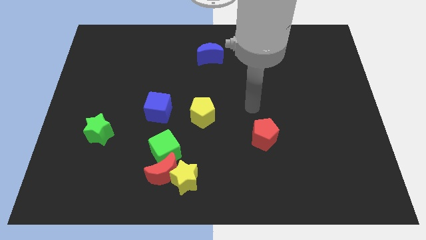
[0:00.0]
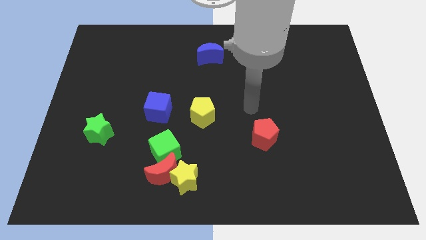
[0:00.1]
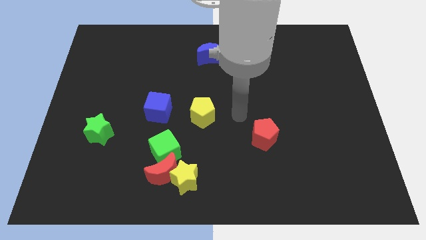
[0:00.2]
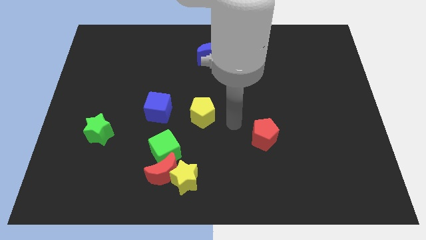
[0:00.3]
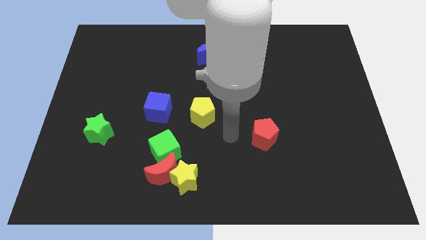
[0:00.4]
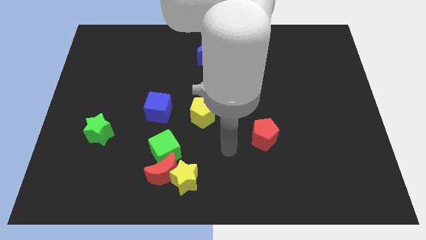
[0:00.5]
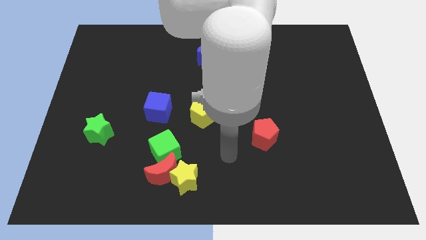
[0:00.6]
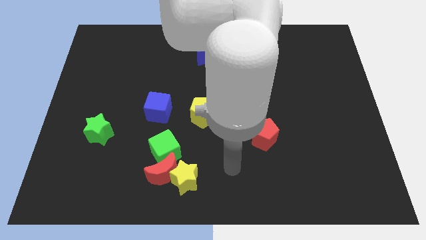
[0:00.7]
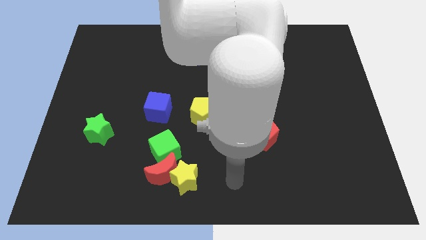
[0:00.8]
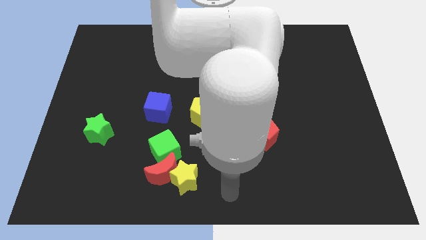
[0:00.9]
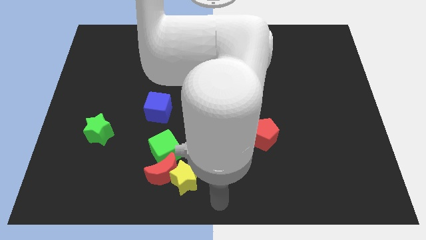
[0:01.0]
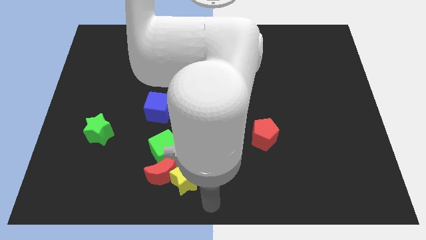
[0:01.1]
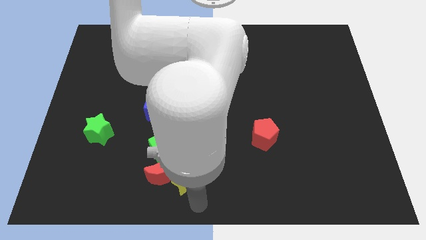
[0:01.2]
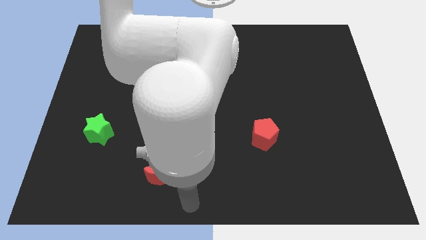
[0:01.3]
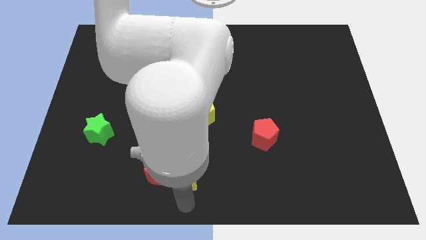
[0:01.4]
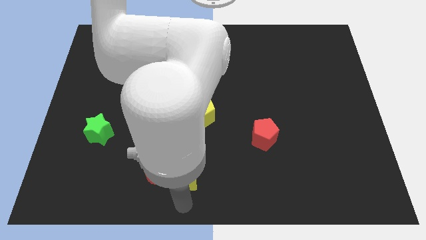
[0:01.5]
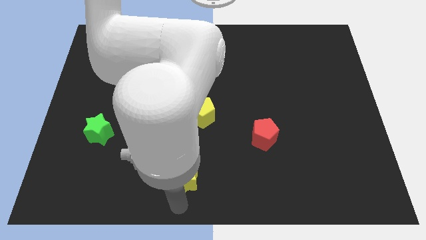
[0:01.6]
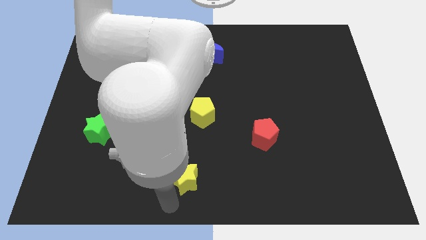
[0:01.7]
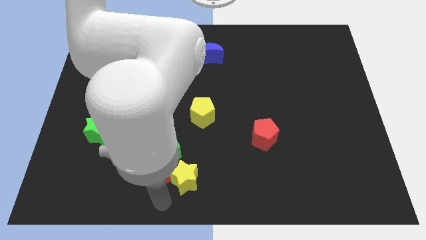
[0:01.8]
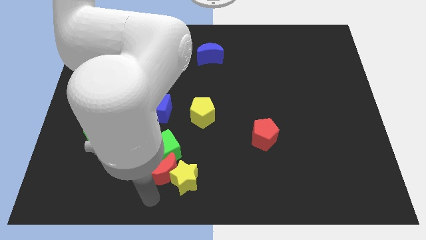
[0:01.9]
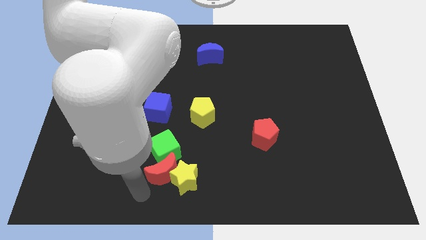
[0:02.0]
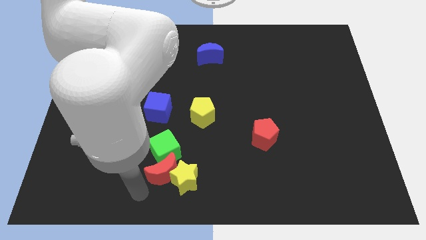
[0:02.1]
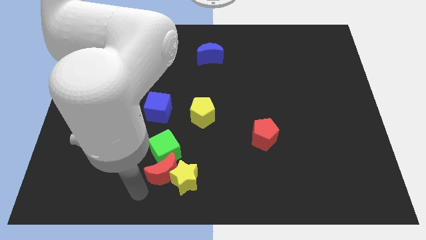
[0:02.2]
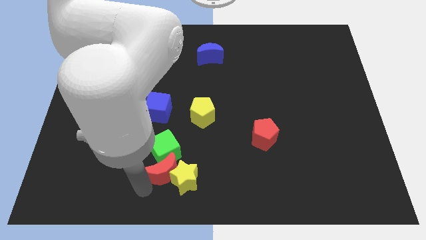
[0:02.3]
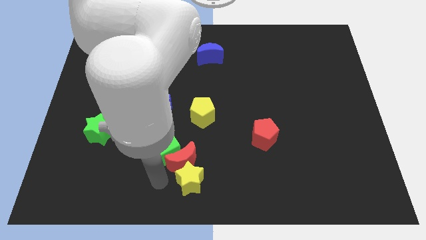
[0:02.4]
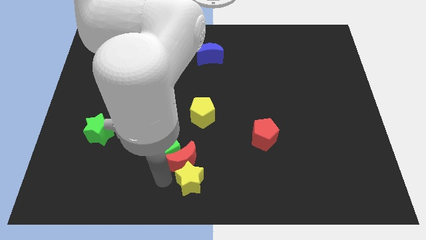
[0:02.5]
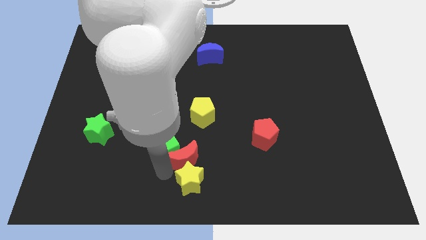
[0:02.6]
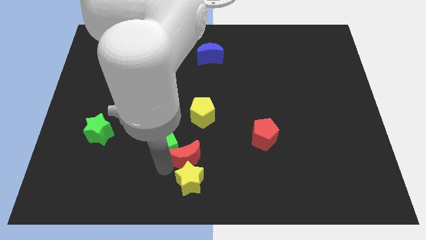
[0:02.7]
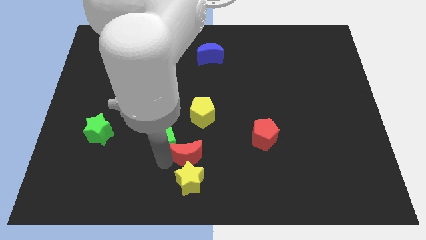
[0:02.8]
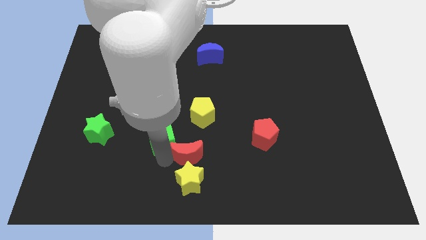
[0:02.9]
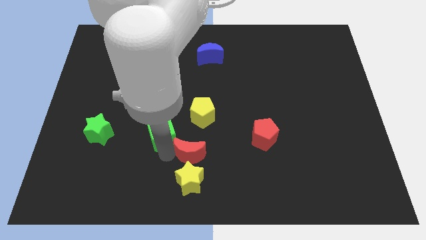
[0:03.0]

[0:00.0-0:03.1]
place the red crescent vertically above the yellow star

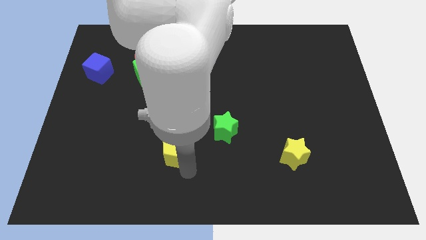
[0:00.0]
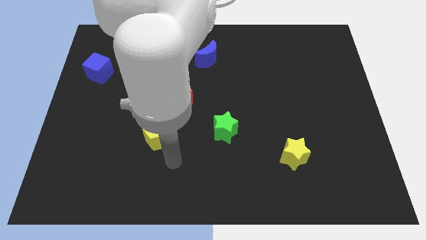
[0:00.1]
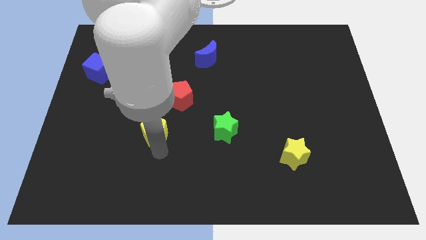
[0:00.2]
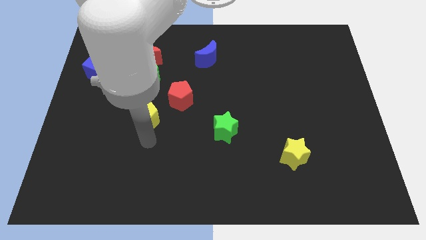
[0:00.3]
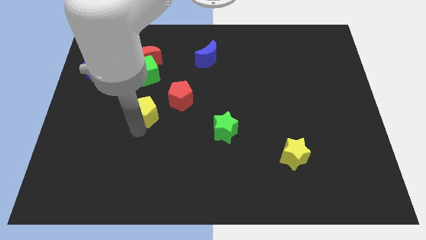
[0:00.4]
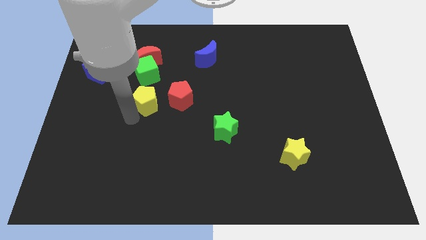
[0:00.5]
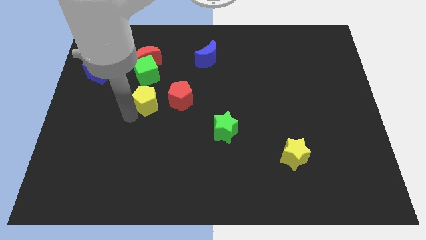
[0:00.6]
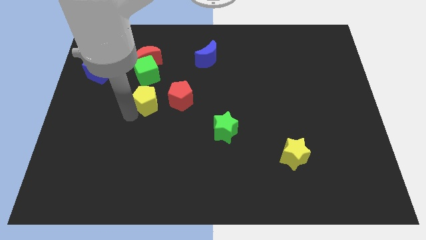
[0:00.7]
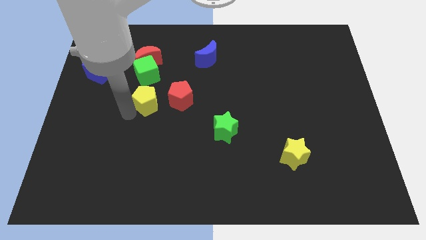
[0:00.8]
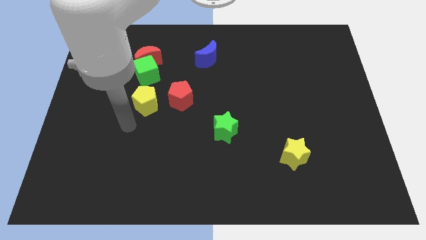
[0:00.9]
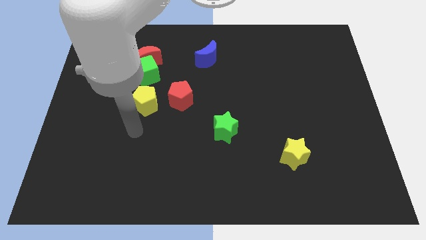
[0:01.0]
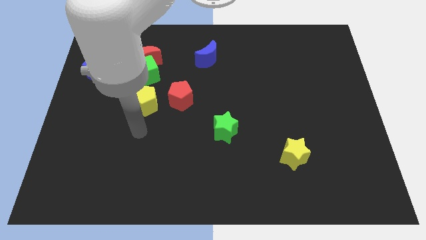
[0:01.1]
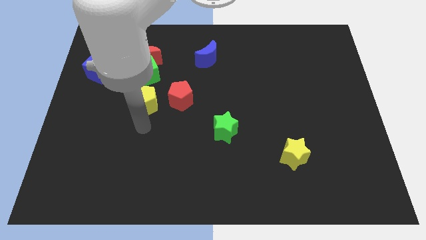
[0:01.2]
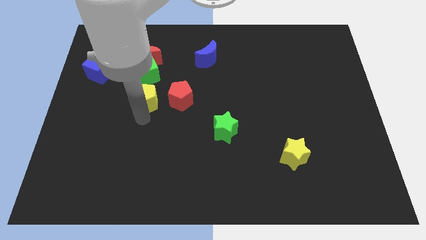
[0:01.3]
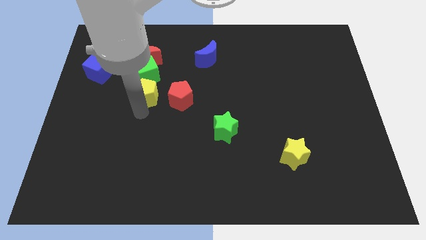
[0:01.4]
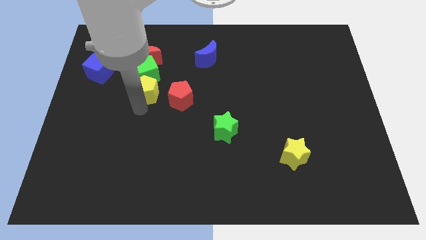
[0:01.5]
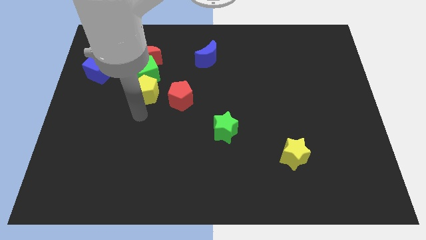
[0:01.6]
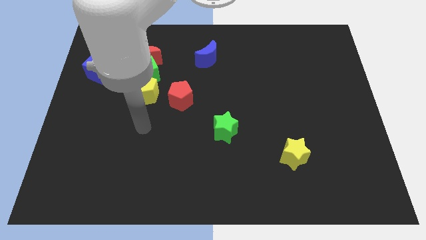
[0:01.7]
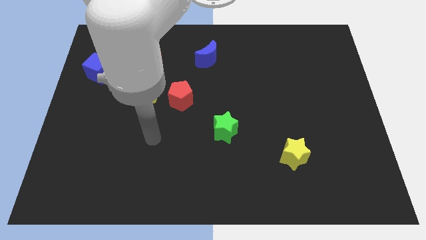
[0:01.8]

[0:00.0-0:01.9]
place the yellow pentagon below the green cube

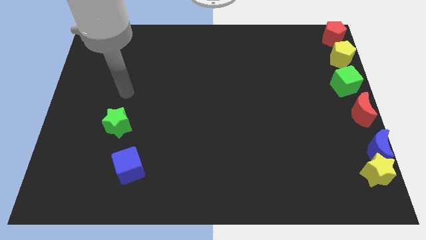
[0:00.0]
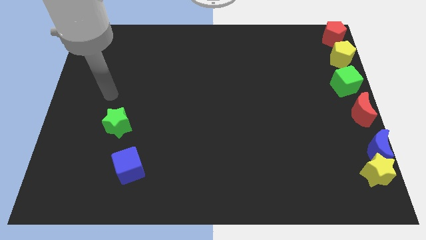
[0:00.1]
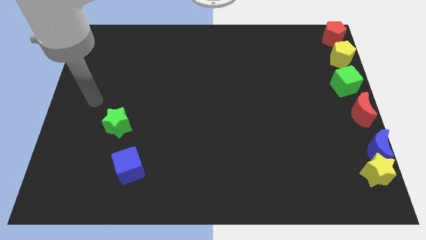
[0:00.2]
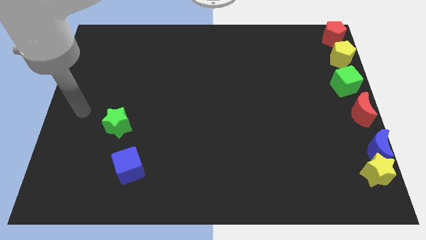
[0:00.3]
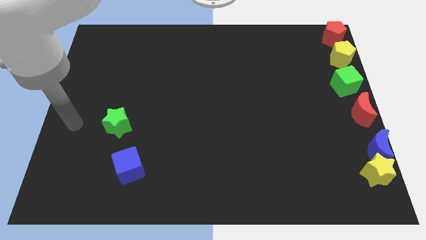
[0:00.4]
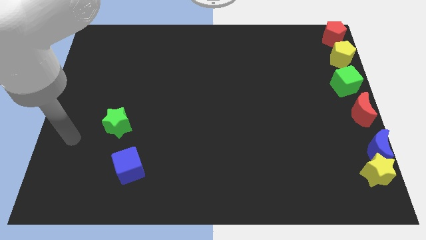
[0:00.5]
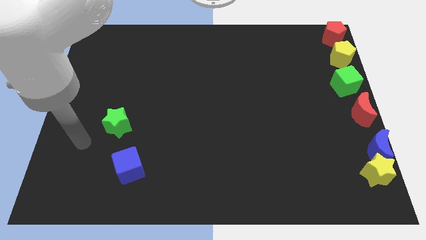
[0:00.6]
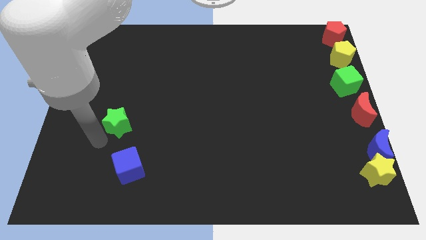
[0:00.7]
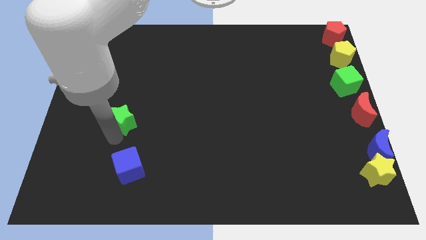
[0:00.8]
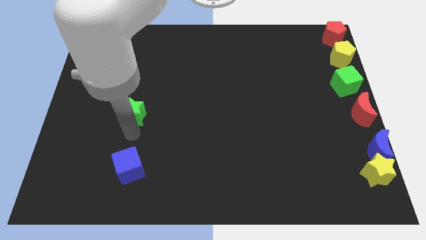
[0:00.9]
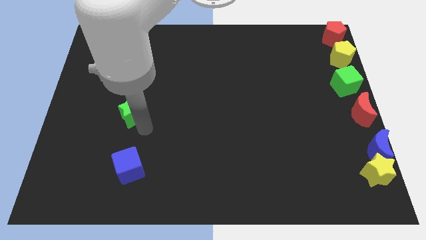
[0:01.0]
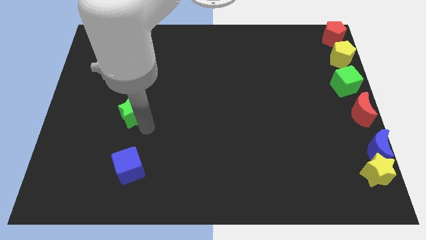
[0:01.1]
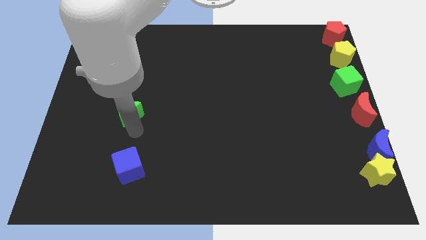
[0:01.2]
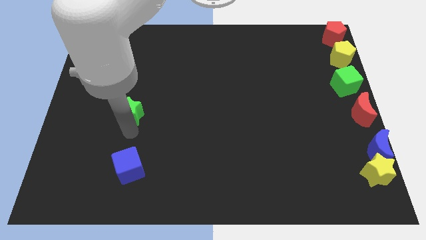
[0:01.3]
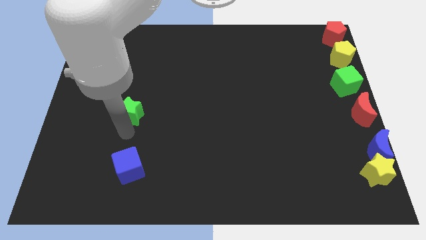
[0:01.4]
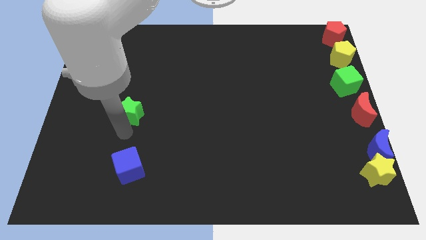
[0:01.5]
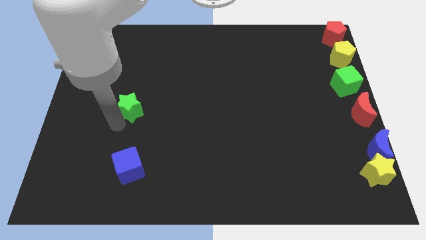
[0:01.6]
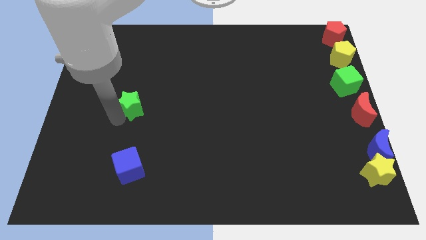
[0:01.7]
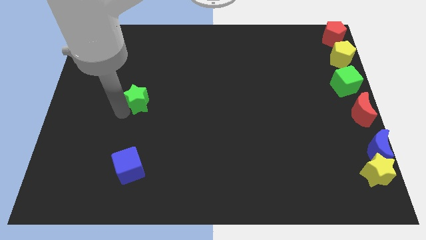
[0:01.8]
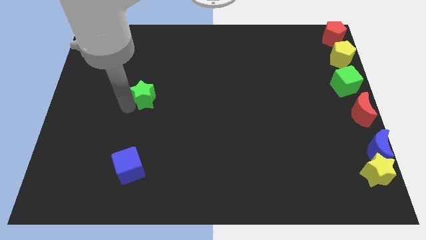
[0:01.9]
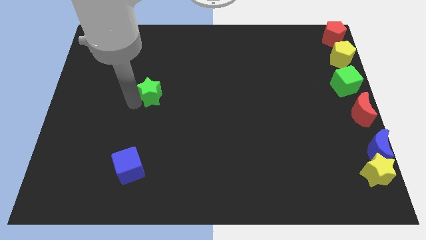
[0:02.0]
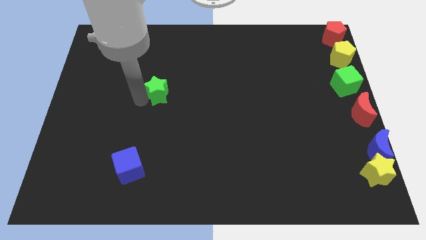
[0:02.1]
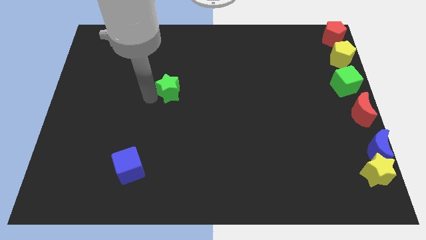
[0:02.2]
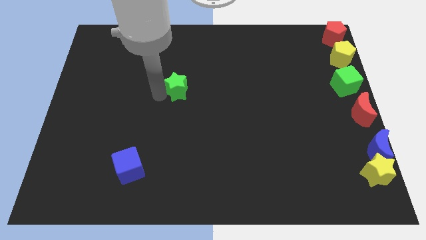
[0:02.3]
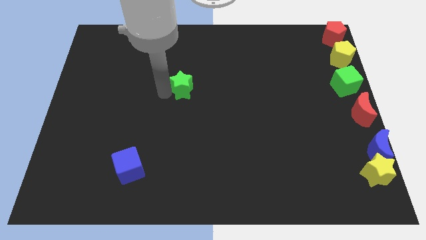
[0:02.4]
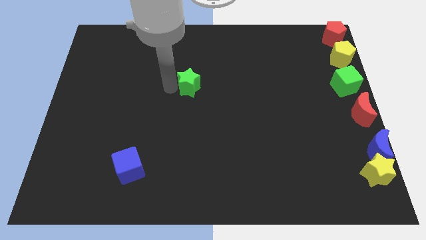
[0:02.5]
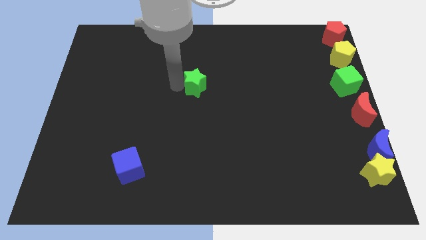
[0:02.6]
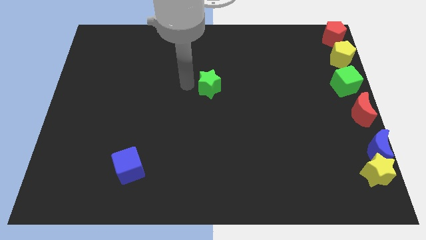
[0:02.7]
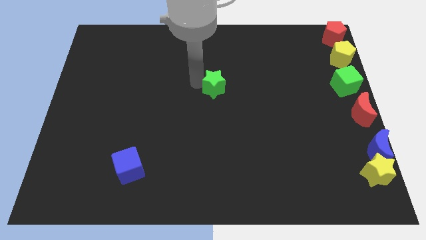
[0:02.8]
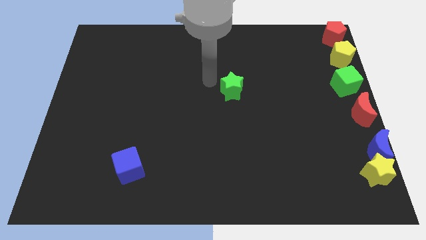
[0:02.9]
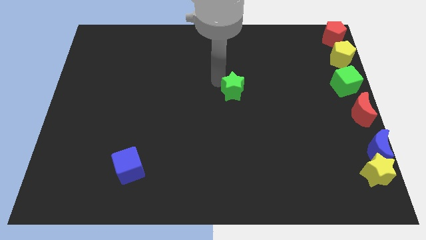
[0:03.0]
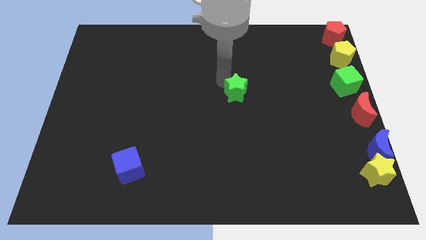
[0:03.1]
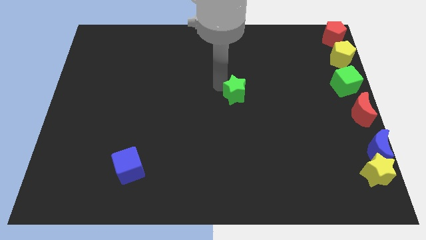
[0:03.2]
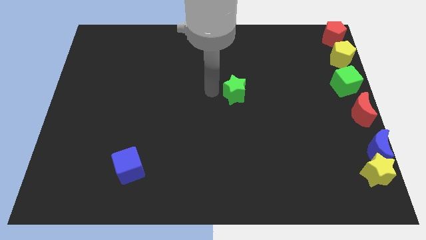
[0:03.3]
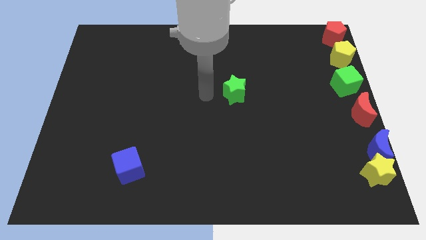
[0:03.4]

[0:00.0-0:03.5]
push the green star near to the center of board

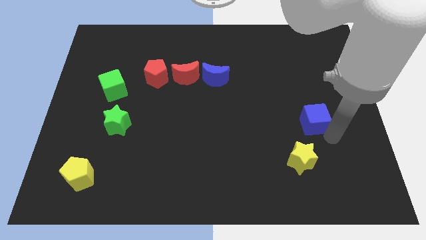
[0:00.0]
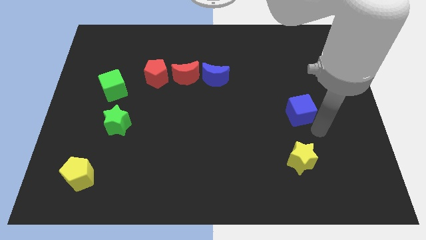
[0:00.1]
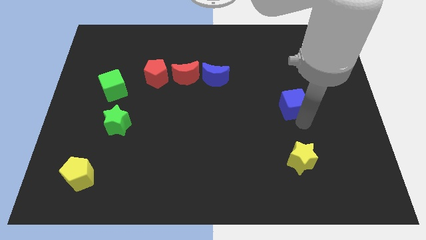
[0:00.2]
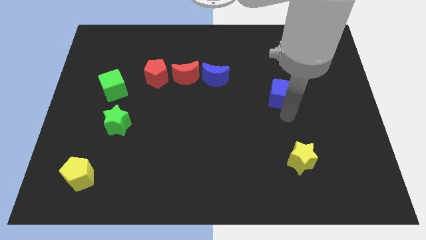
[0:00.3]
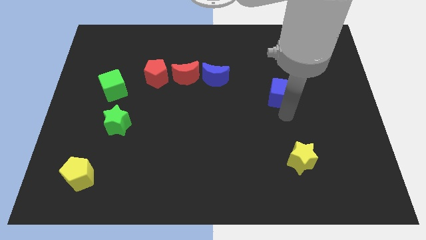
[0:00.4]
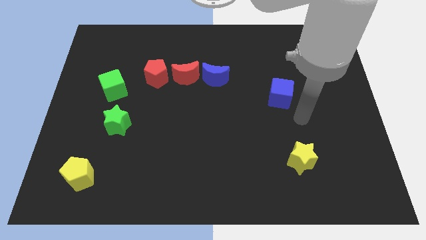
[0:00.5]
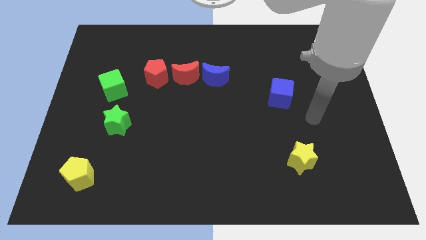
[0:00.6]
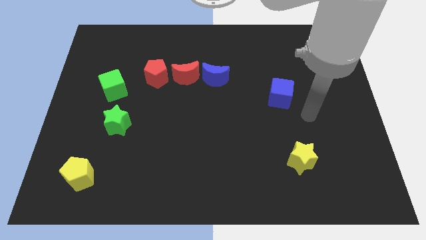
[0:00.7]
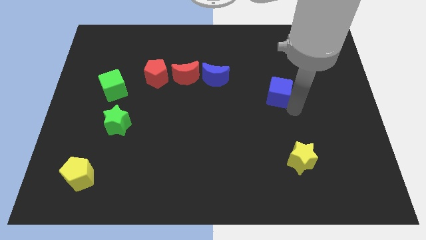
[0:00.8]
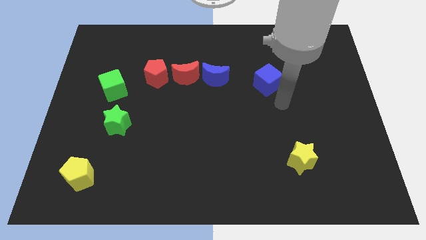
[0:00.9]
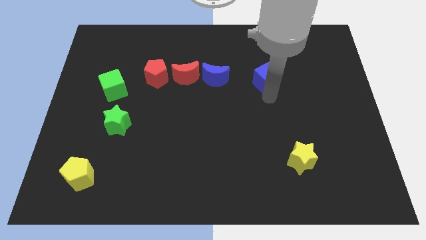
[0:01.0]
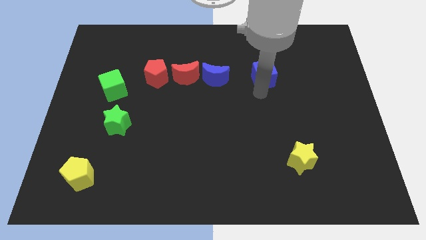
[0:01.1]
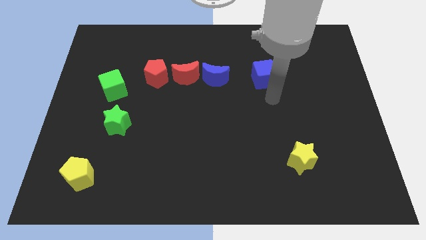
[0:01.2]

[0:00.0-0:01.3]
place blue cube to the right of blue moon
